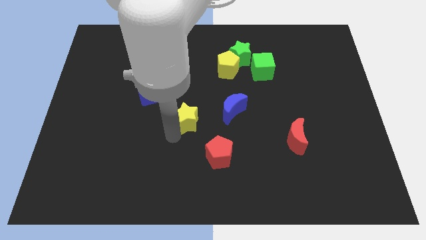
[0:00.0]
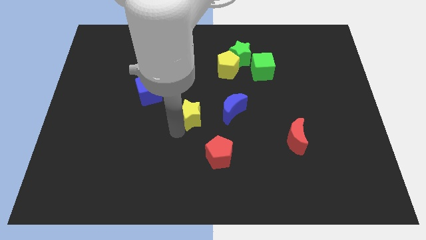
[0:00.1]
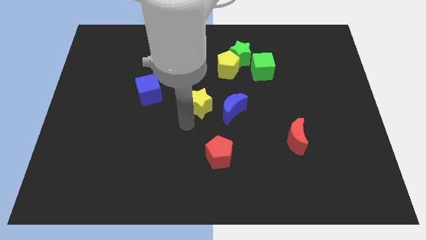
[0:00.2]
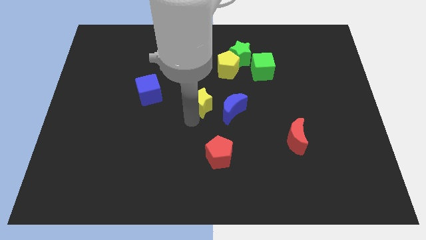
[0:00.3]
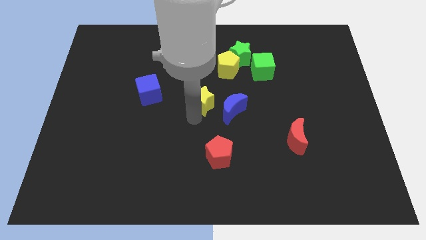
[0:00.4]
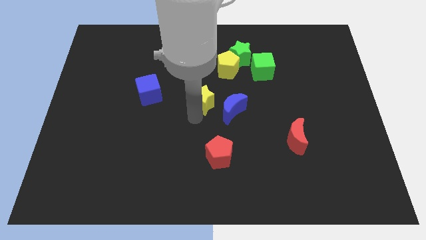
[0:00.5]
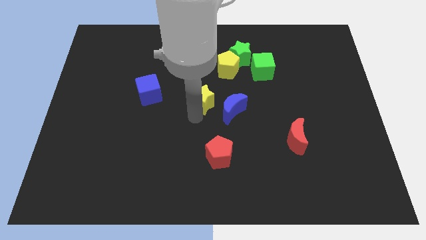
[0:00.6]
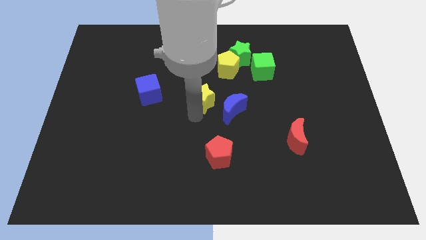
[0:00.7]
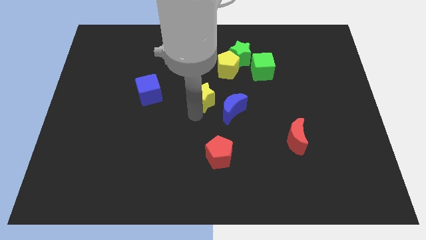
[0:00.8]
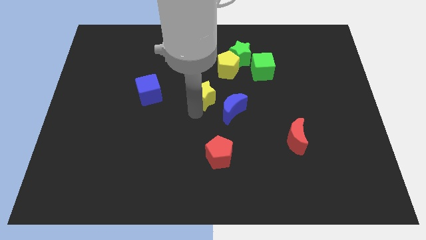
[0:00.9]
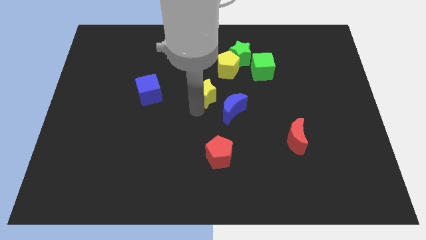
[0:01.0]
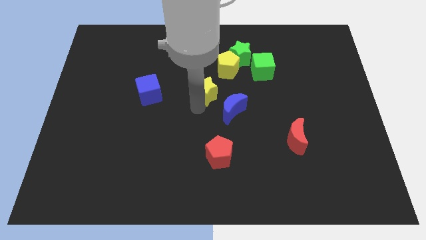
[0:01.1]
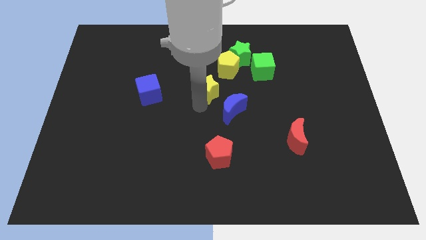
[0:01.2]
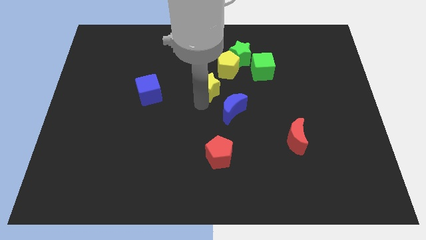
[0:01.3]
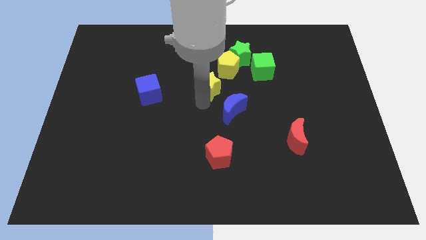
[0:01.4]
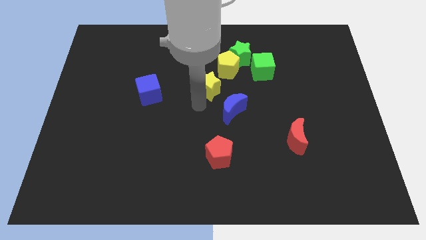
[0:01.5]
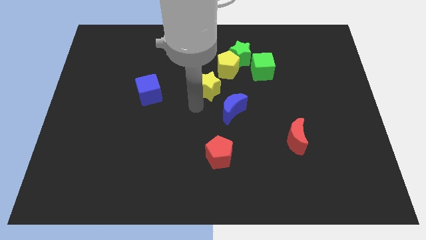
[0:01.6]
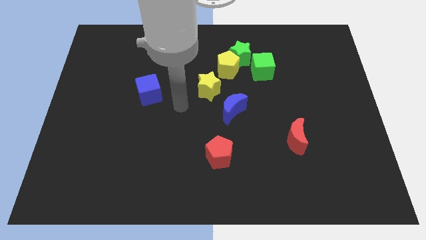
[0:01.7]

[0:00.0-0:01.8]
push the yellow star diagonally to the bottom left of the yellow pentagon

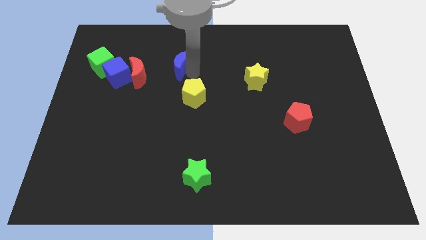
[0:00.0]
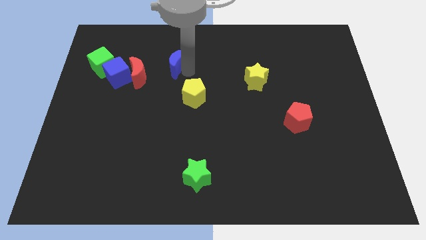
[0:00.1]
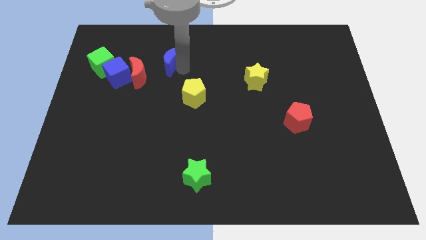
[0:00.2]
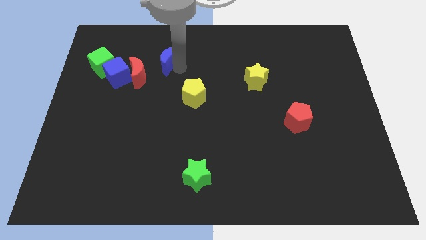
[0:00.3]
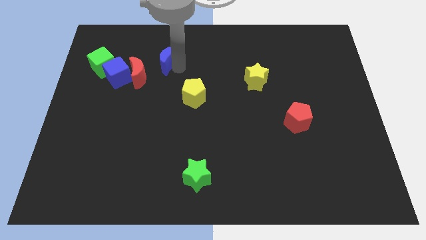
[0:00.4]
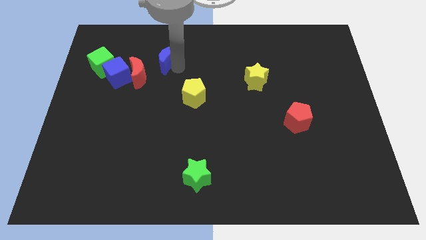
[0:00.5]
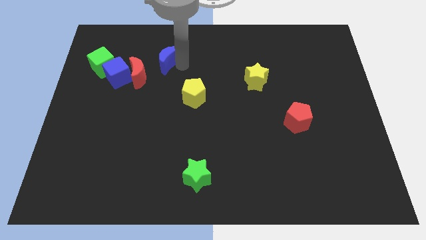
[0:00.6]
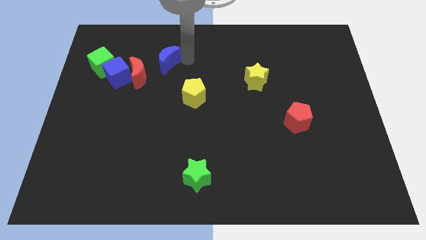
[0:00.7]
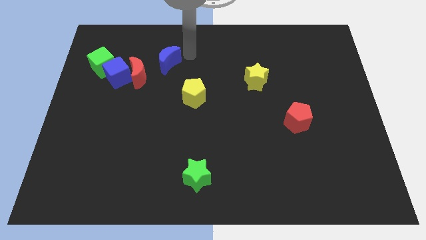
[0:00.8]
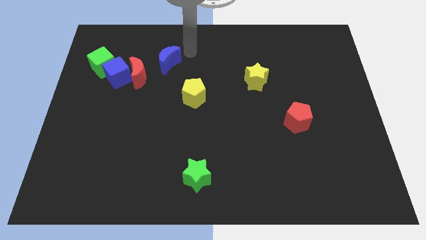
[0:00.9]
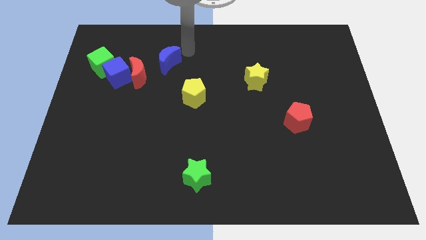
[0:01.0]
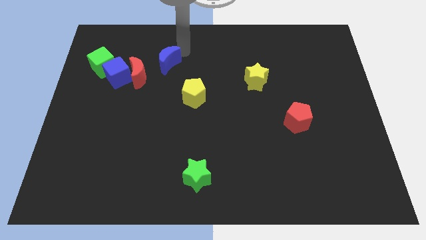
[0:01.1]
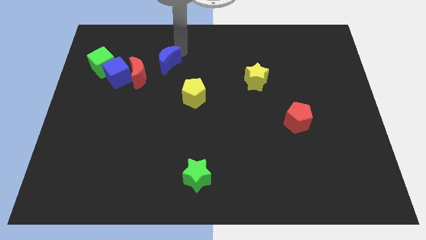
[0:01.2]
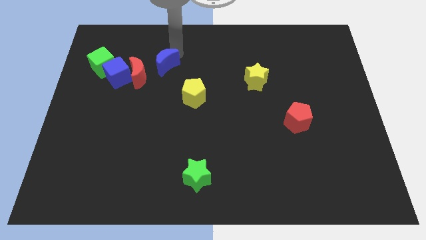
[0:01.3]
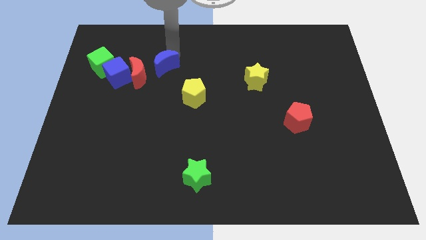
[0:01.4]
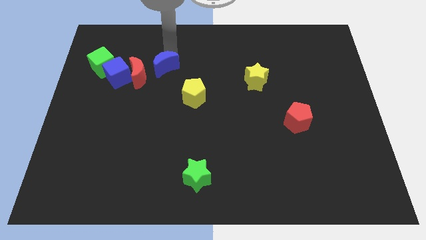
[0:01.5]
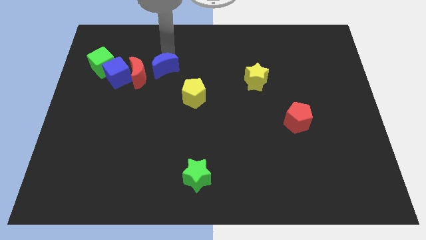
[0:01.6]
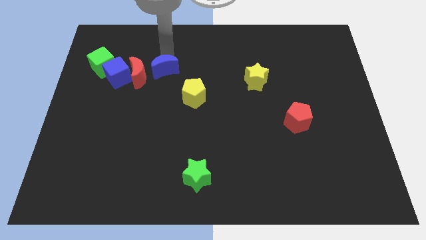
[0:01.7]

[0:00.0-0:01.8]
move the blue crescent to the right of red crescent

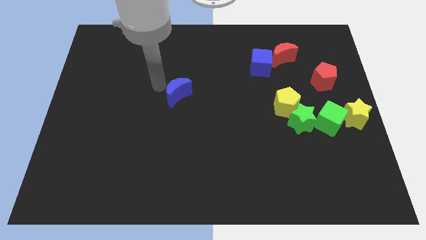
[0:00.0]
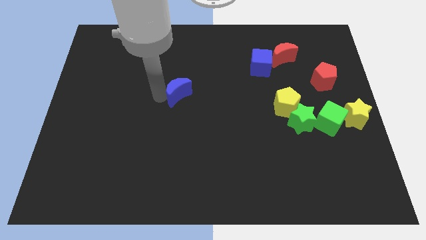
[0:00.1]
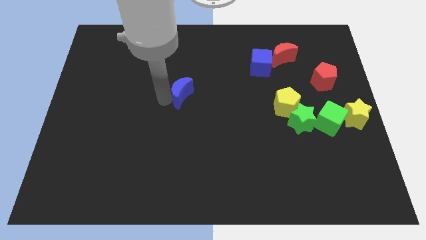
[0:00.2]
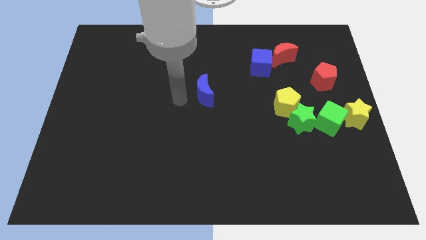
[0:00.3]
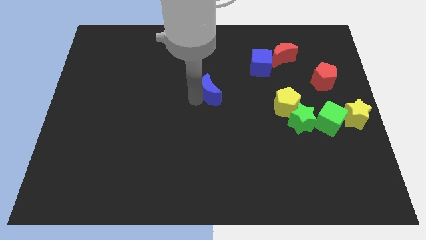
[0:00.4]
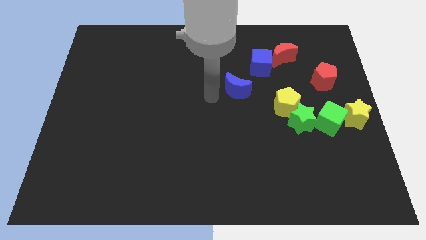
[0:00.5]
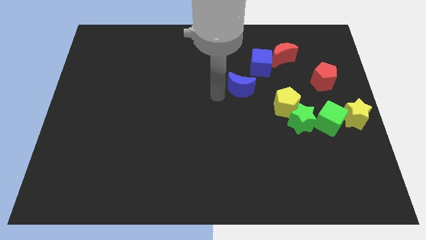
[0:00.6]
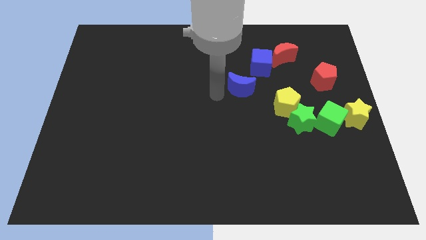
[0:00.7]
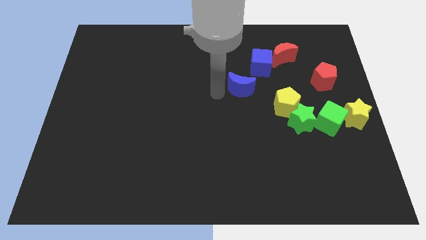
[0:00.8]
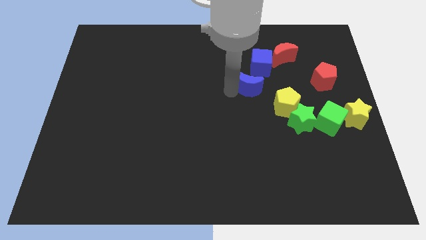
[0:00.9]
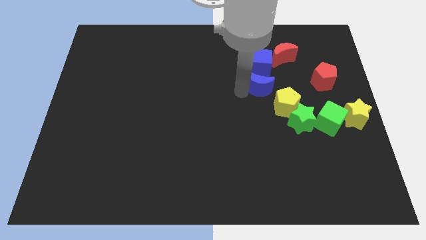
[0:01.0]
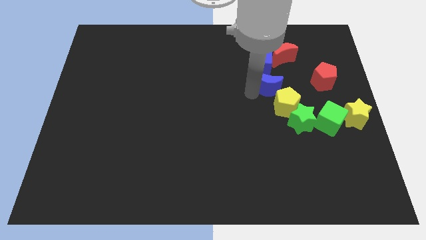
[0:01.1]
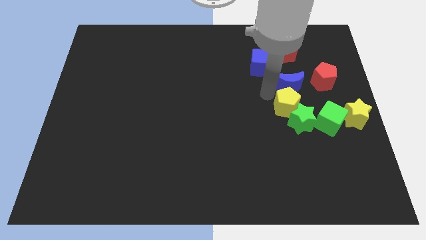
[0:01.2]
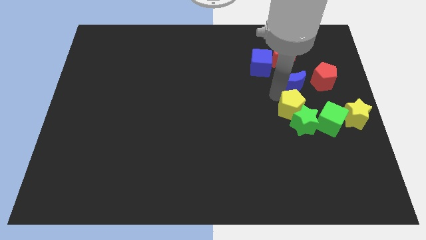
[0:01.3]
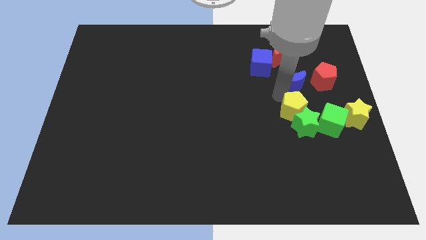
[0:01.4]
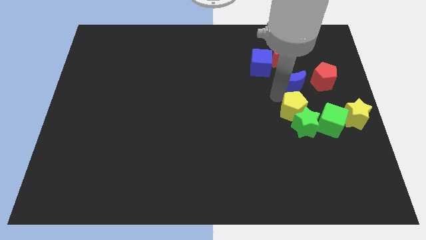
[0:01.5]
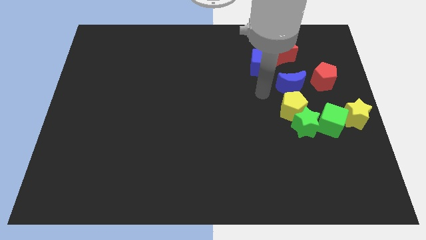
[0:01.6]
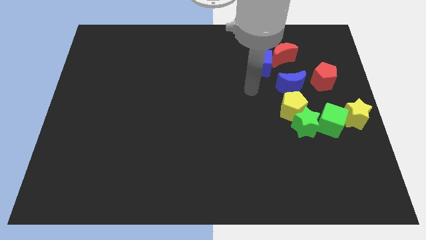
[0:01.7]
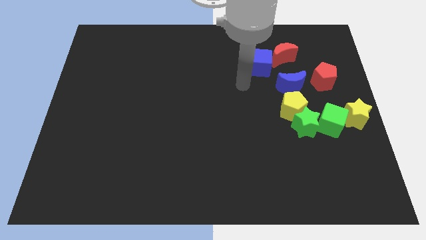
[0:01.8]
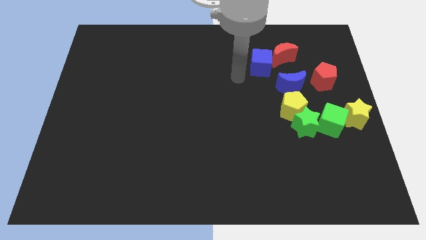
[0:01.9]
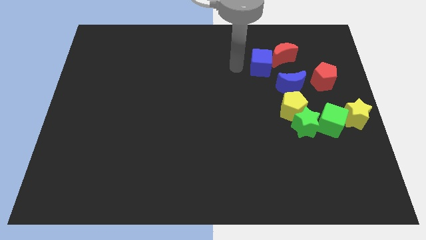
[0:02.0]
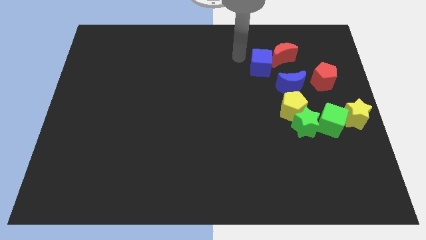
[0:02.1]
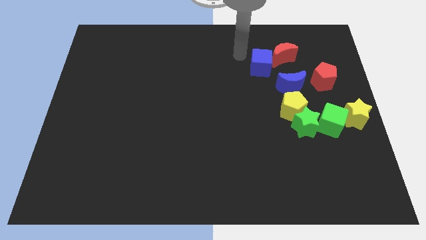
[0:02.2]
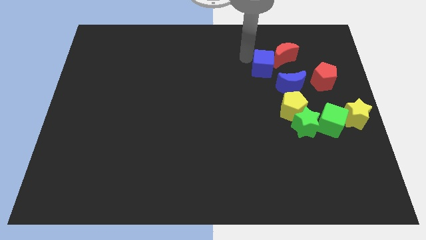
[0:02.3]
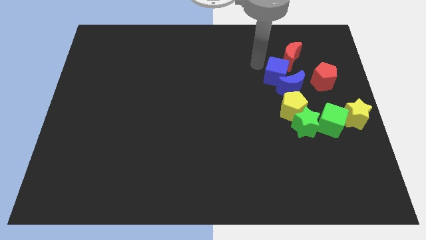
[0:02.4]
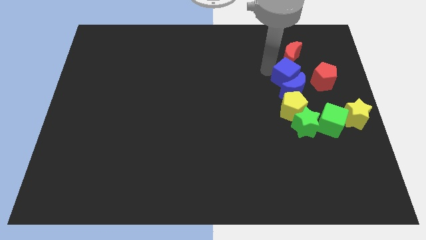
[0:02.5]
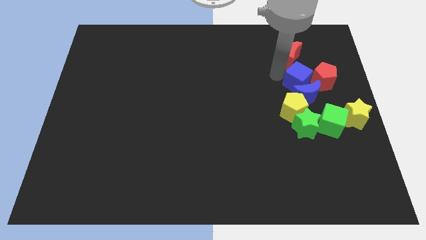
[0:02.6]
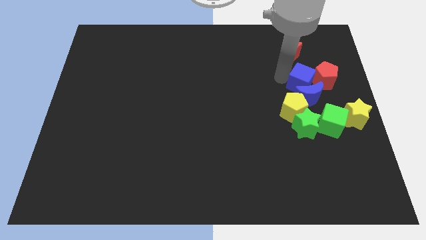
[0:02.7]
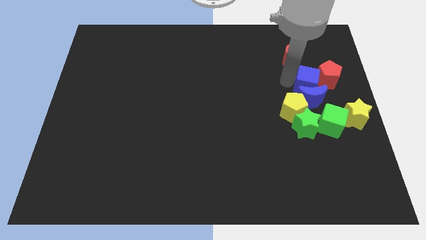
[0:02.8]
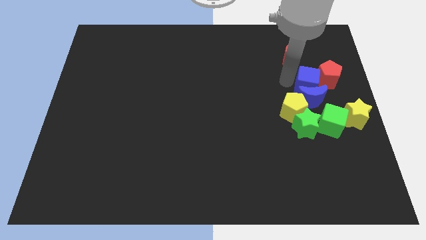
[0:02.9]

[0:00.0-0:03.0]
push the blue blocks to the left of the red pentagon

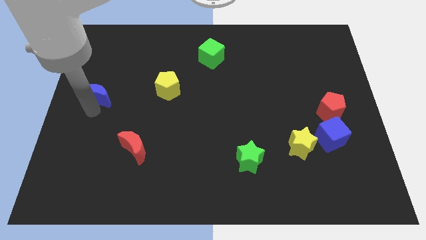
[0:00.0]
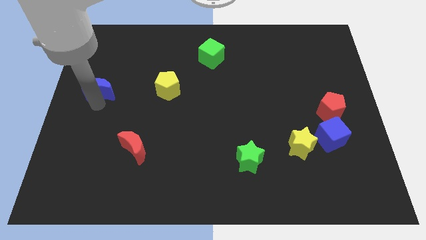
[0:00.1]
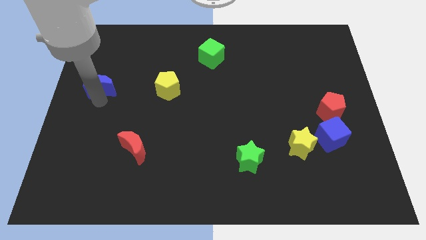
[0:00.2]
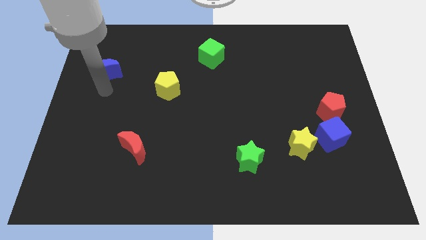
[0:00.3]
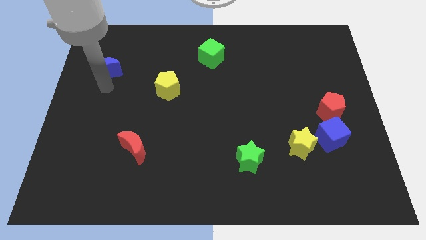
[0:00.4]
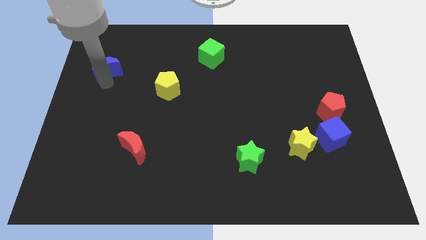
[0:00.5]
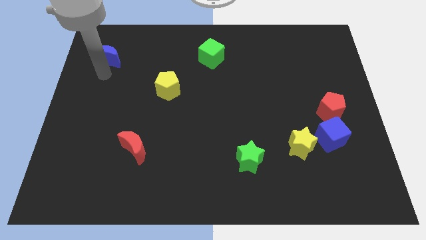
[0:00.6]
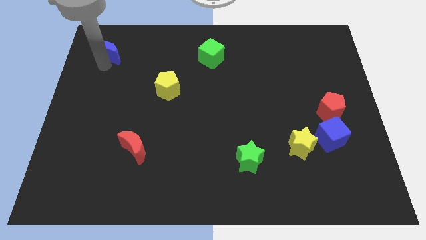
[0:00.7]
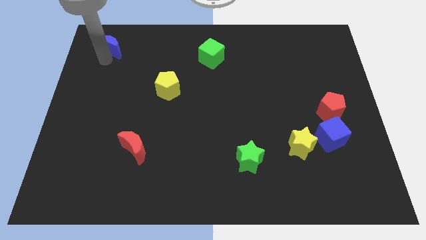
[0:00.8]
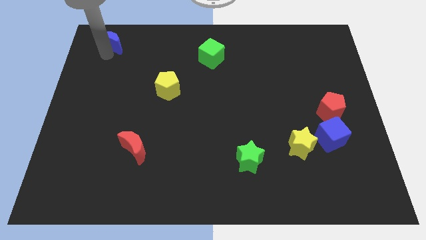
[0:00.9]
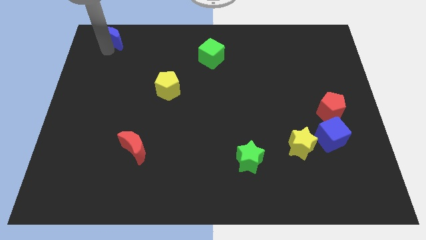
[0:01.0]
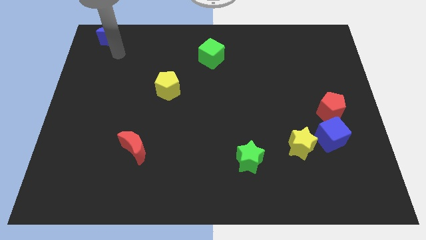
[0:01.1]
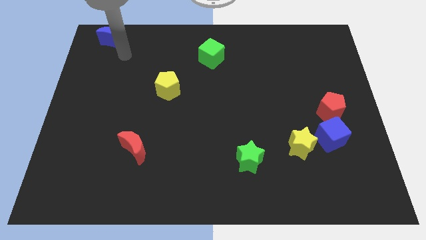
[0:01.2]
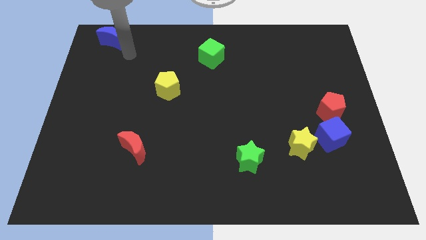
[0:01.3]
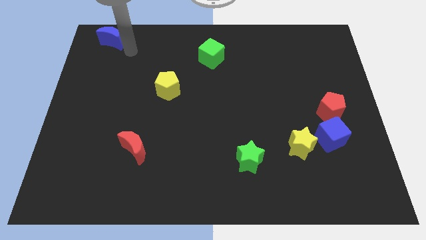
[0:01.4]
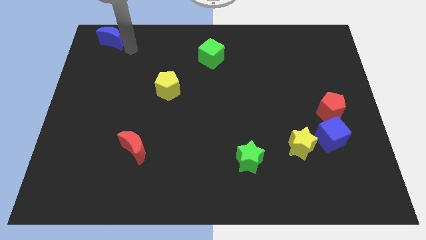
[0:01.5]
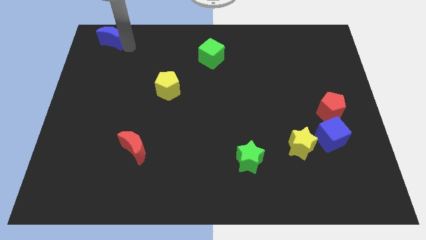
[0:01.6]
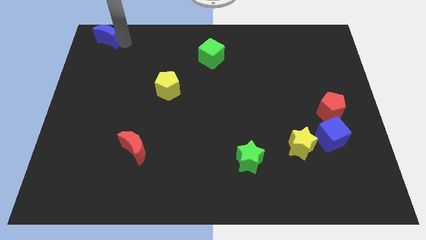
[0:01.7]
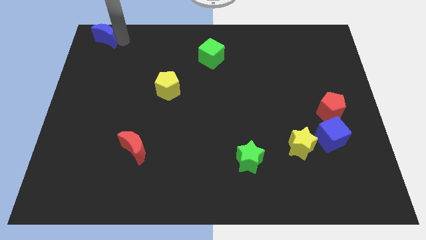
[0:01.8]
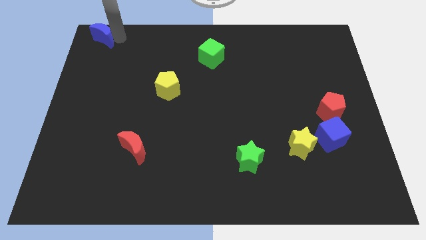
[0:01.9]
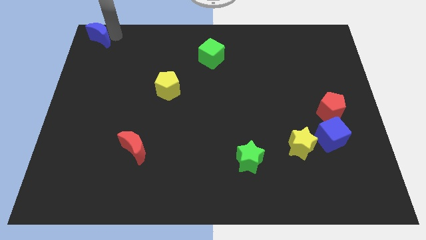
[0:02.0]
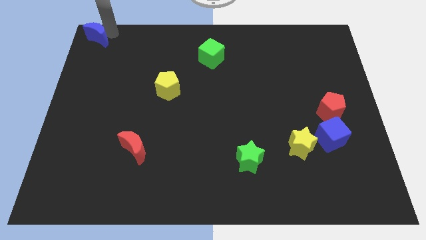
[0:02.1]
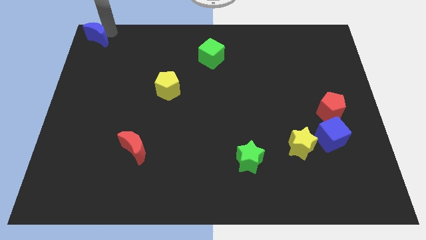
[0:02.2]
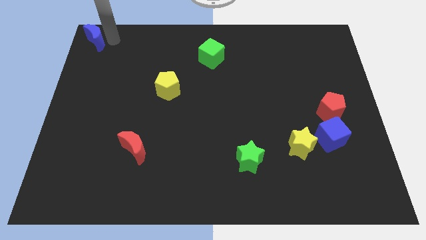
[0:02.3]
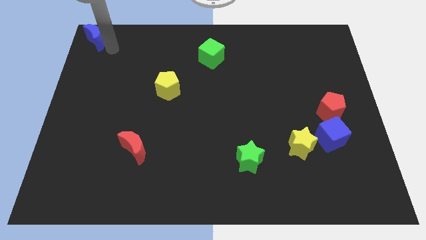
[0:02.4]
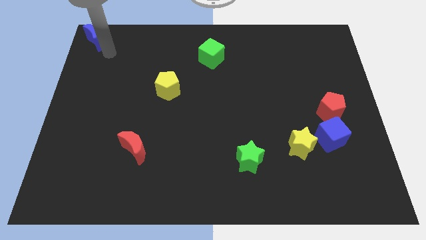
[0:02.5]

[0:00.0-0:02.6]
push the blue crescent to the top left corner of the board
